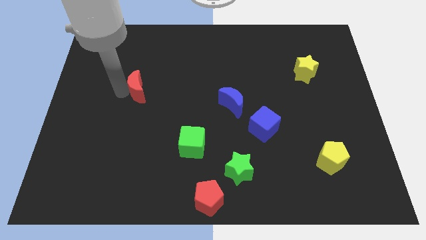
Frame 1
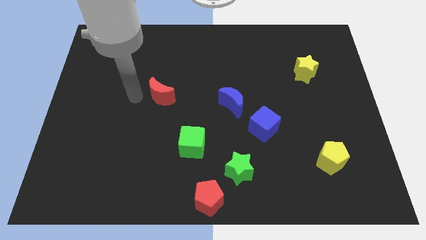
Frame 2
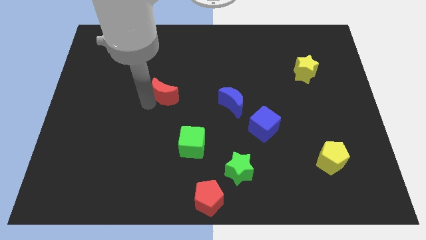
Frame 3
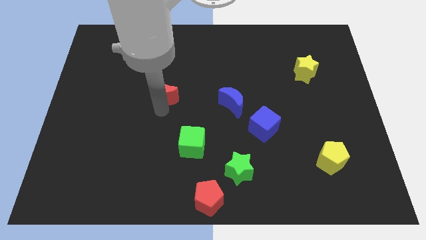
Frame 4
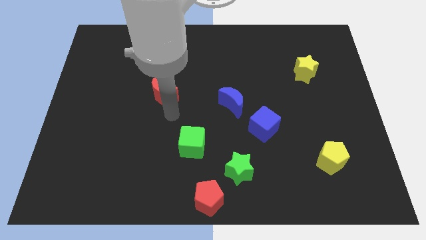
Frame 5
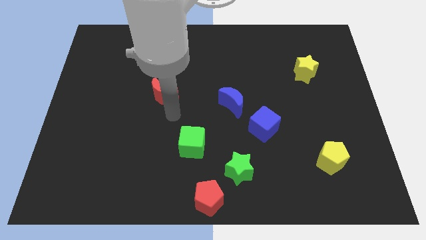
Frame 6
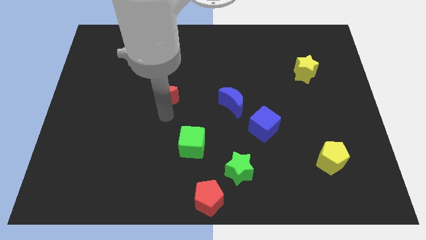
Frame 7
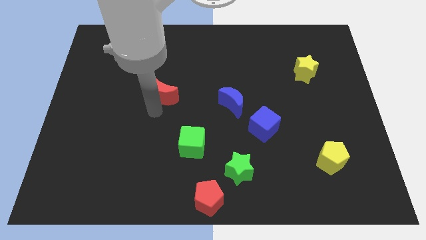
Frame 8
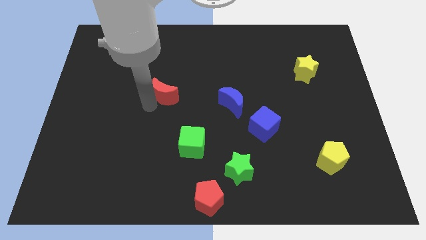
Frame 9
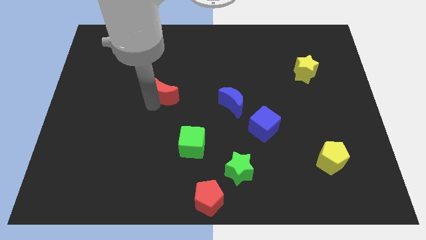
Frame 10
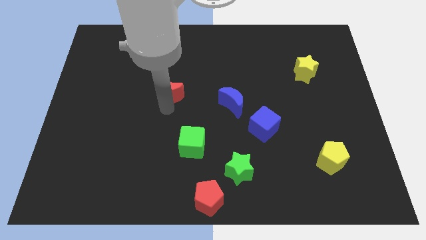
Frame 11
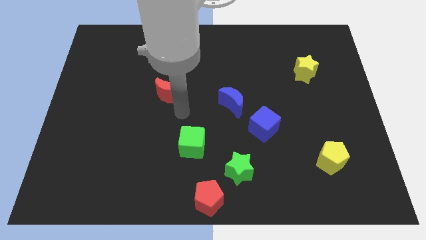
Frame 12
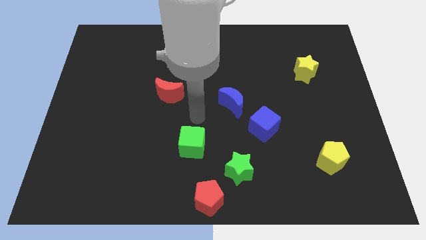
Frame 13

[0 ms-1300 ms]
try to move the red crescent to right side

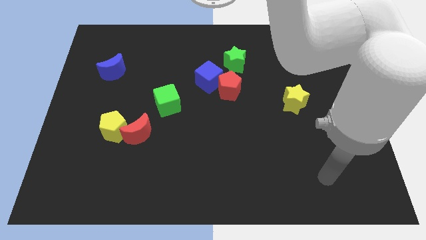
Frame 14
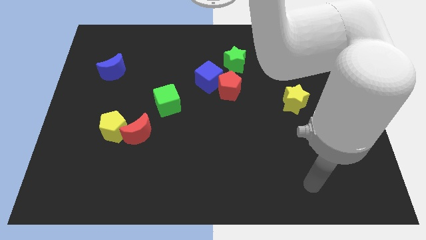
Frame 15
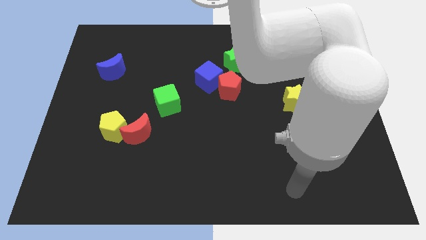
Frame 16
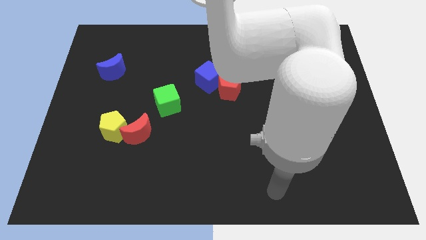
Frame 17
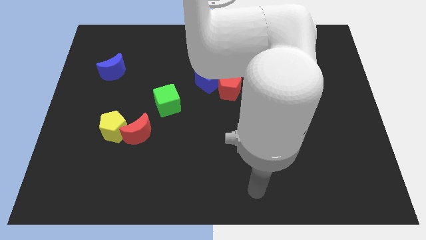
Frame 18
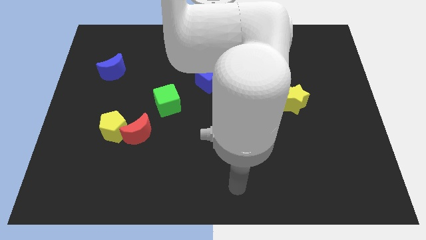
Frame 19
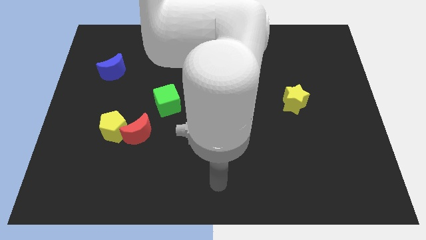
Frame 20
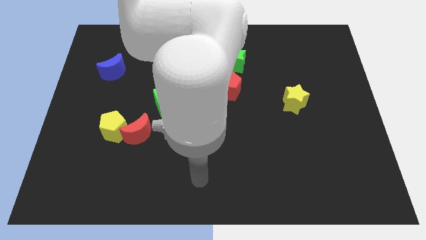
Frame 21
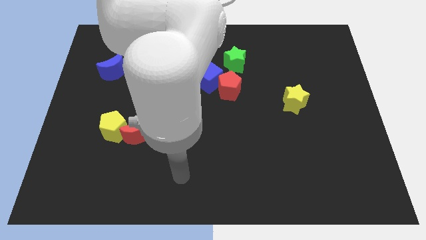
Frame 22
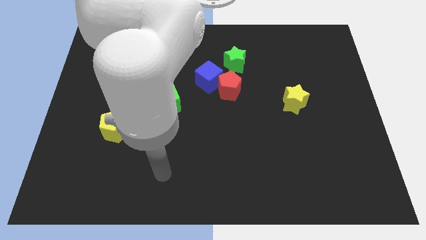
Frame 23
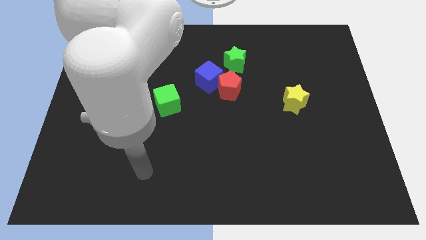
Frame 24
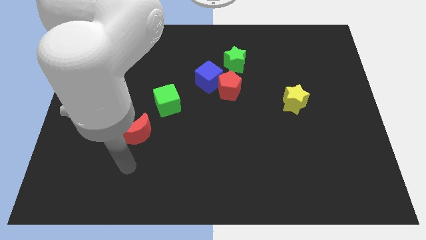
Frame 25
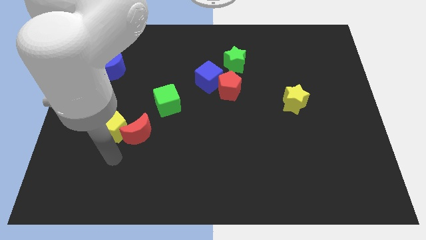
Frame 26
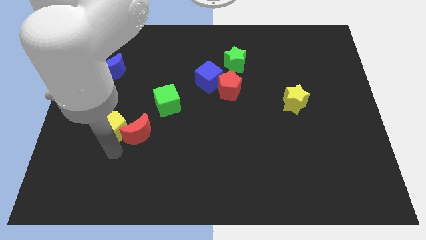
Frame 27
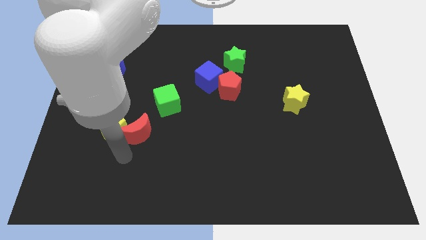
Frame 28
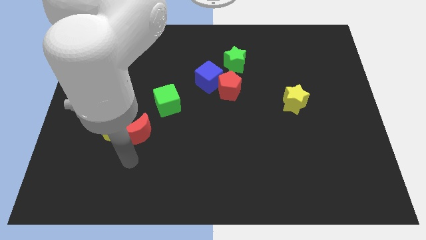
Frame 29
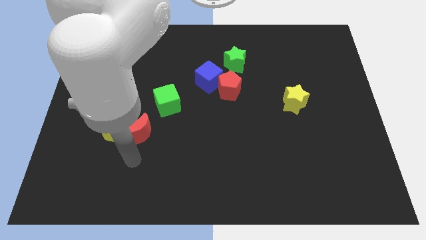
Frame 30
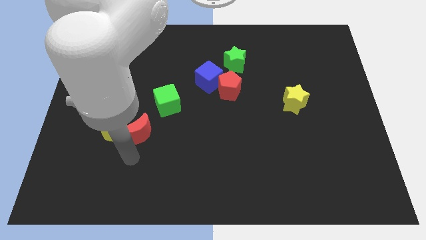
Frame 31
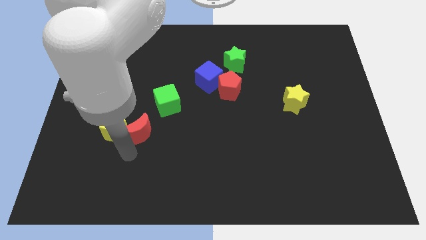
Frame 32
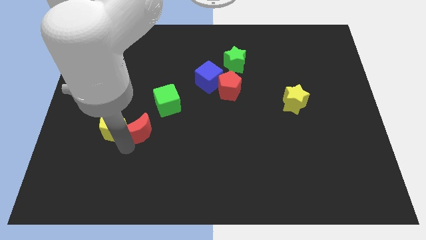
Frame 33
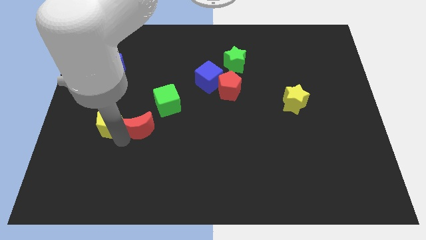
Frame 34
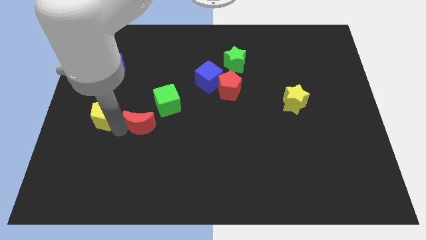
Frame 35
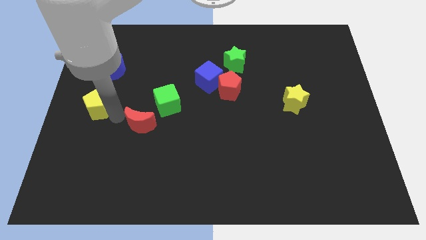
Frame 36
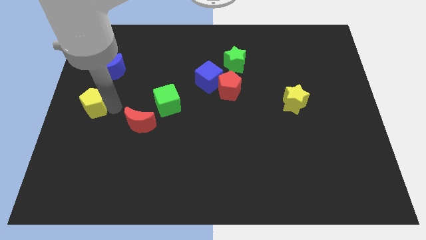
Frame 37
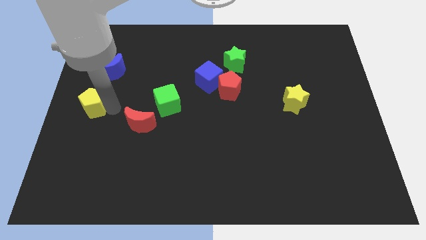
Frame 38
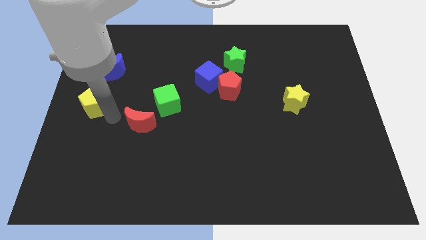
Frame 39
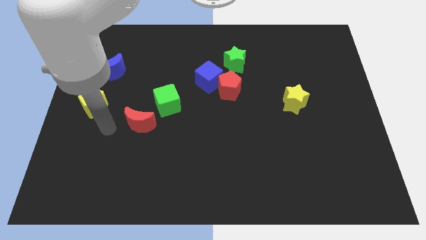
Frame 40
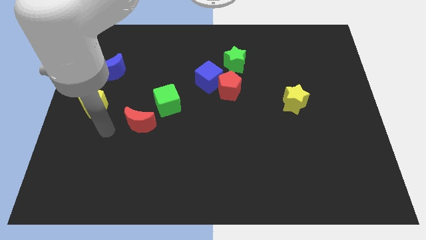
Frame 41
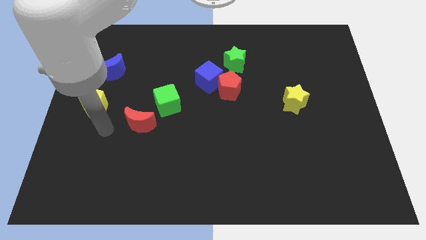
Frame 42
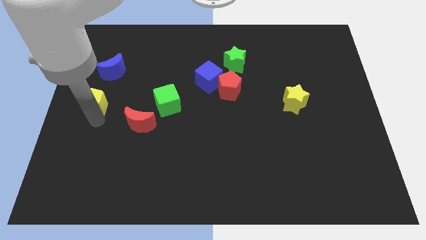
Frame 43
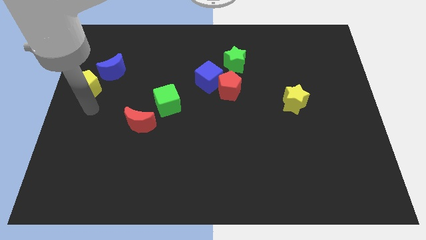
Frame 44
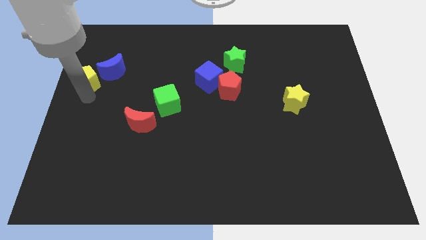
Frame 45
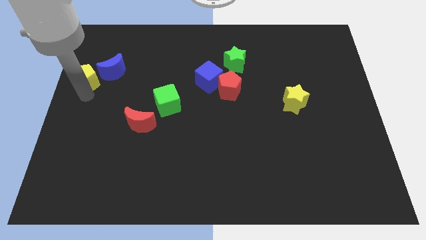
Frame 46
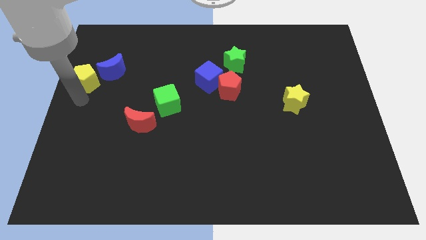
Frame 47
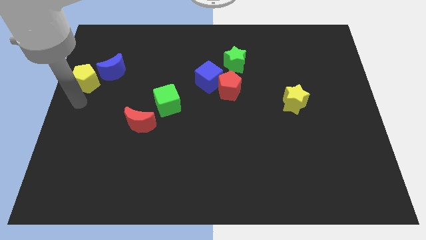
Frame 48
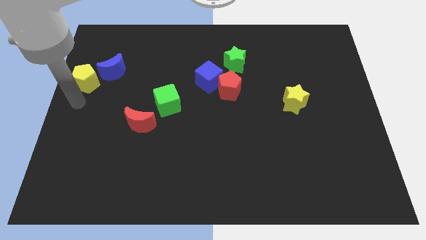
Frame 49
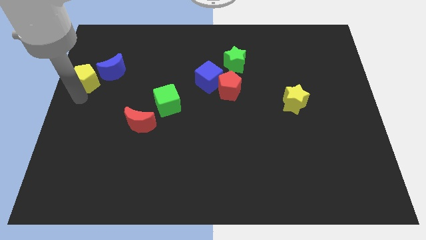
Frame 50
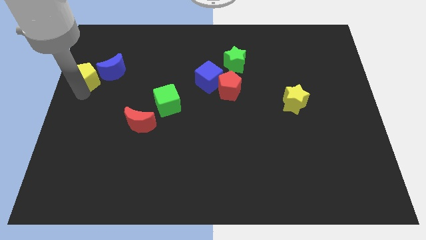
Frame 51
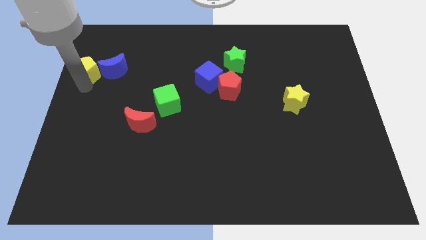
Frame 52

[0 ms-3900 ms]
place the yellow pentagon to the left side of blue moon

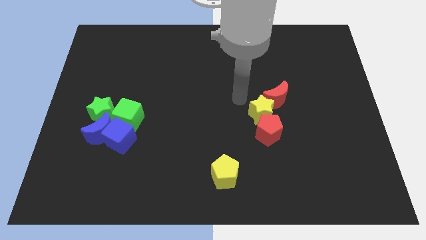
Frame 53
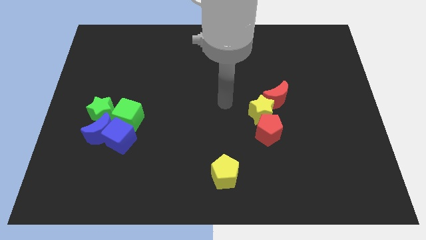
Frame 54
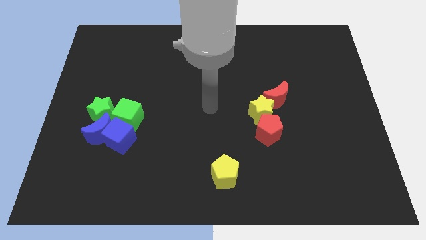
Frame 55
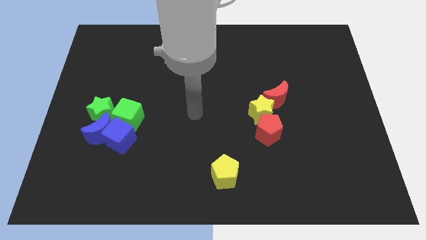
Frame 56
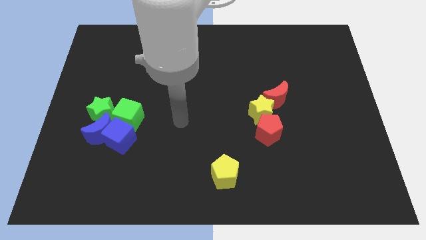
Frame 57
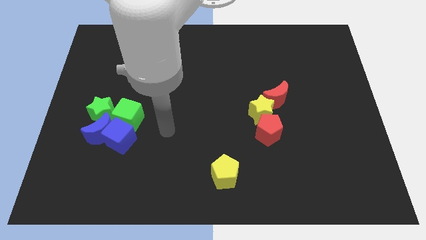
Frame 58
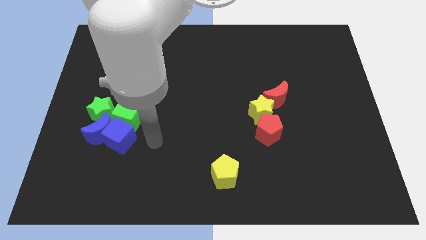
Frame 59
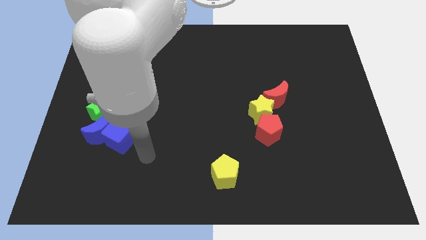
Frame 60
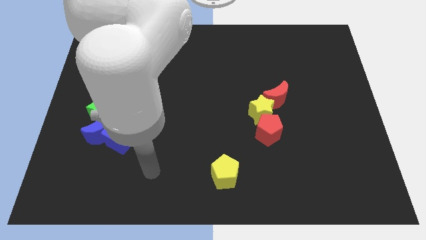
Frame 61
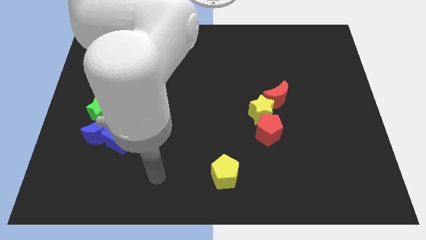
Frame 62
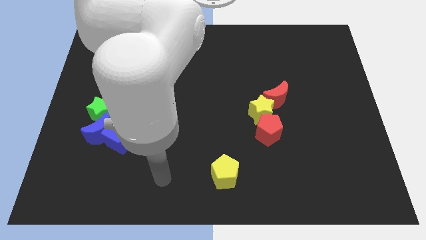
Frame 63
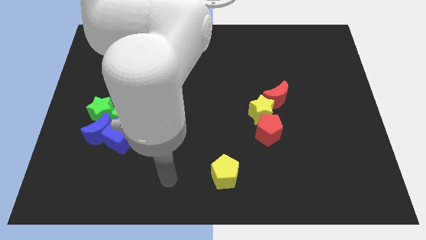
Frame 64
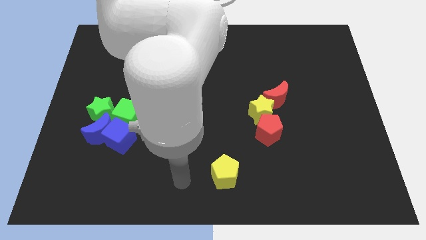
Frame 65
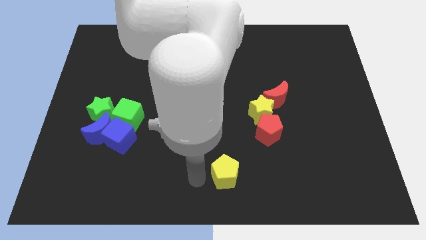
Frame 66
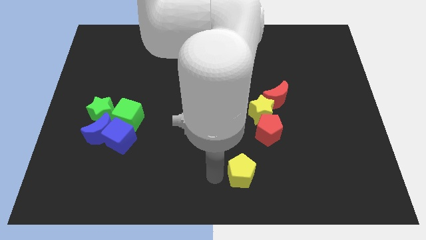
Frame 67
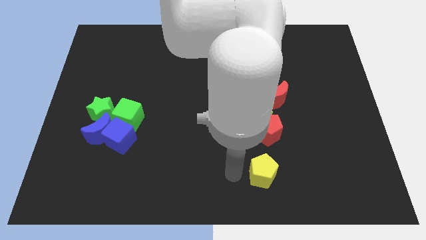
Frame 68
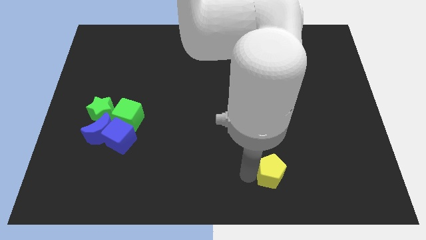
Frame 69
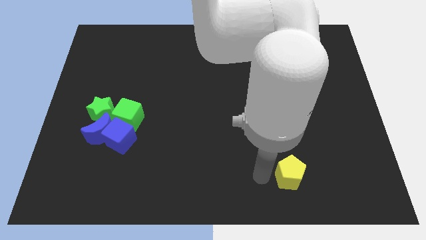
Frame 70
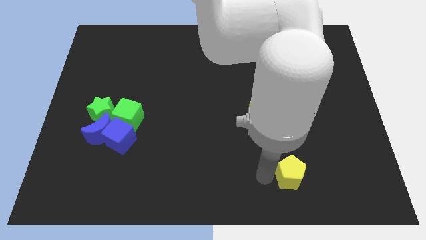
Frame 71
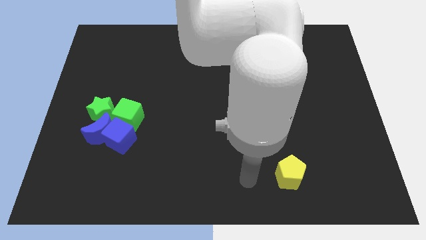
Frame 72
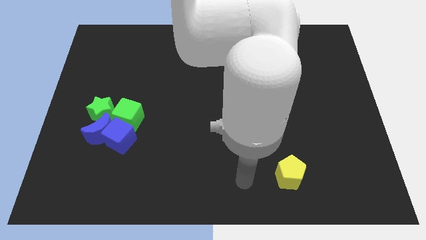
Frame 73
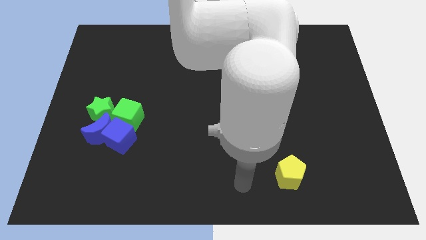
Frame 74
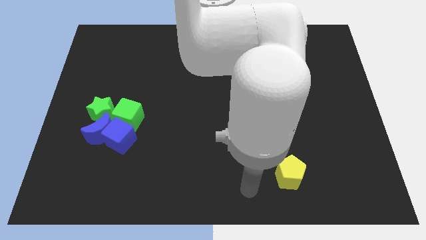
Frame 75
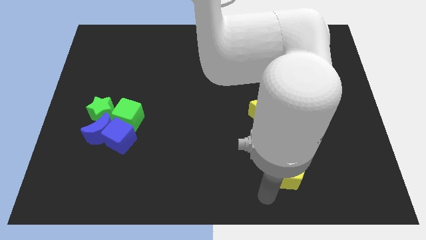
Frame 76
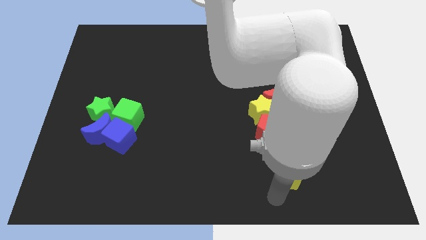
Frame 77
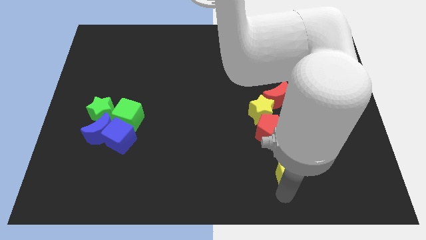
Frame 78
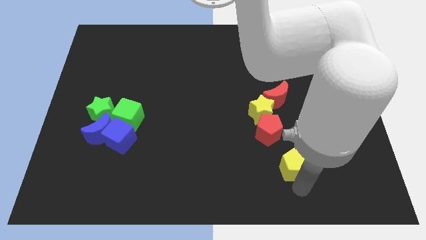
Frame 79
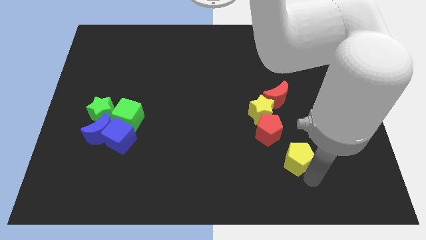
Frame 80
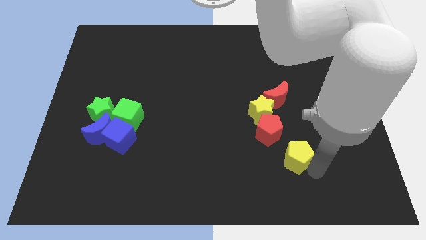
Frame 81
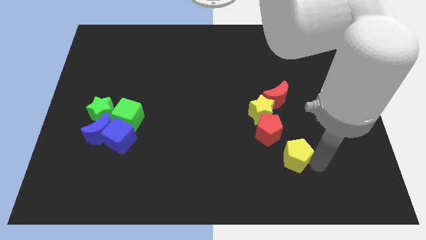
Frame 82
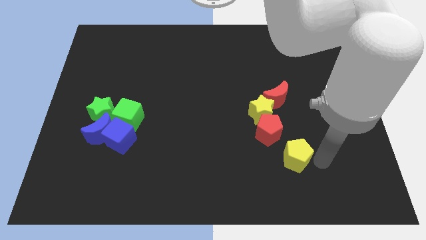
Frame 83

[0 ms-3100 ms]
move the yellow pentagon to the bottom right of the red pentagon

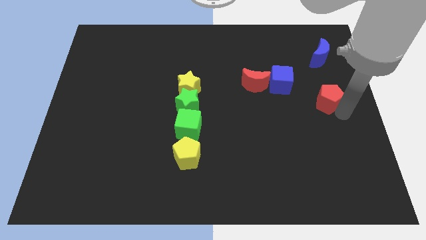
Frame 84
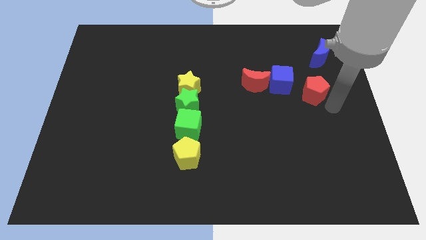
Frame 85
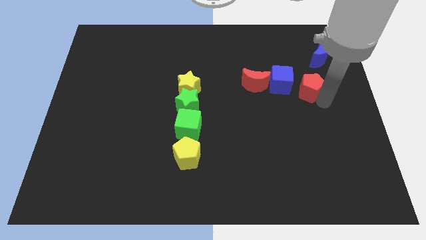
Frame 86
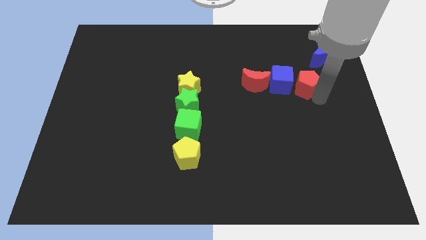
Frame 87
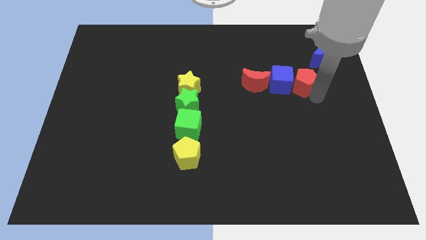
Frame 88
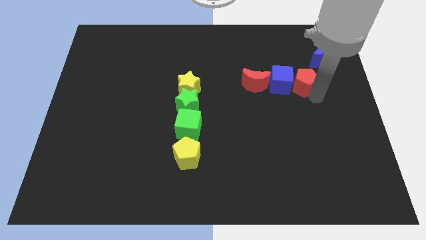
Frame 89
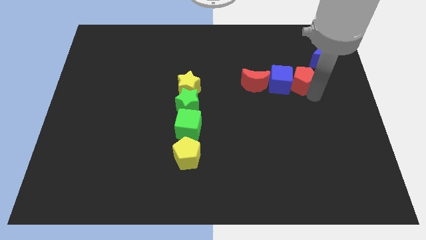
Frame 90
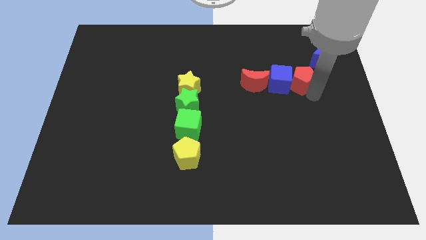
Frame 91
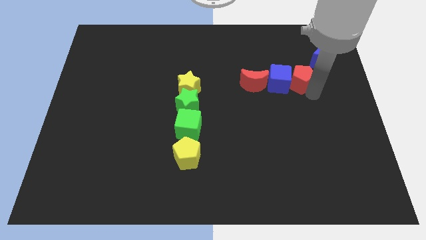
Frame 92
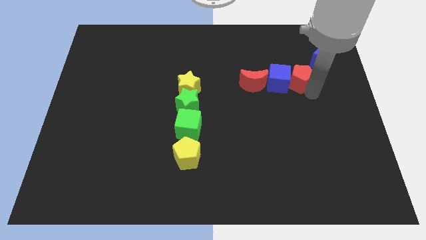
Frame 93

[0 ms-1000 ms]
move red pentagon right blue cube
